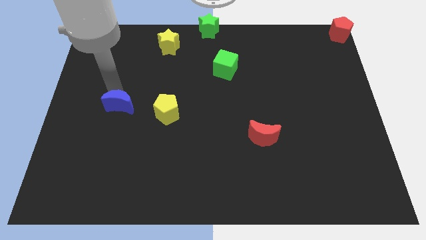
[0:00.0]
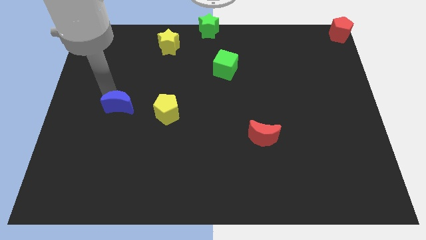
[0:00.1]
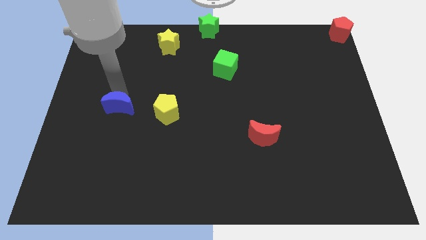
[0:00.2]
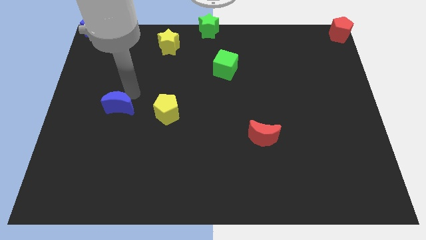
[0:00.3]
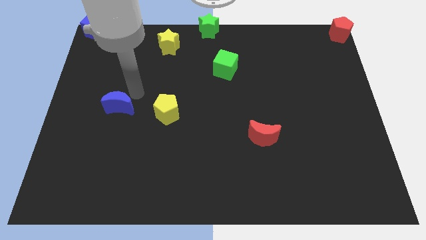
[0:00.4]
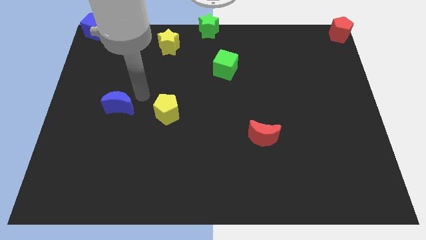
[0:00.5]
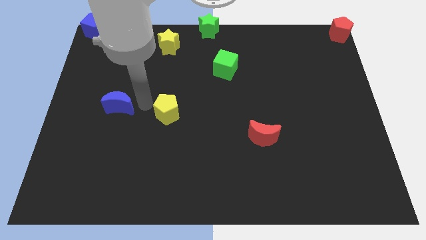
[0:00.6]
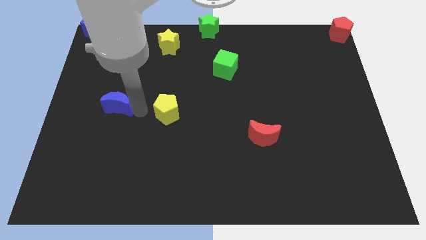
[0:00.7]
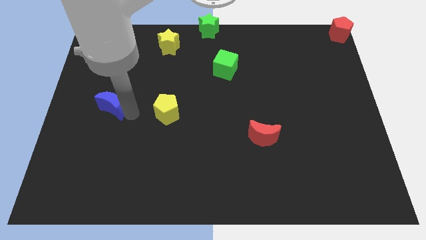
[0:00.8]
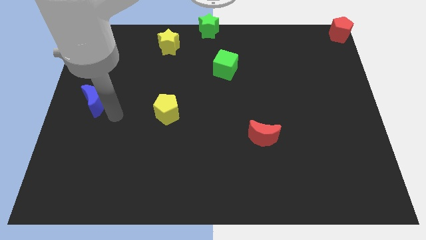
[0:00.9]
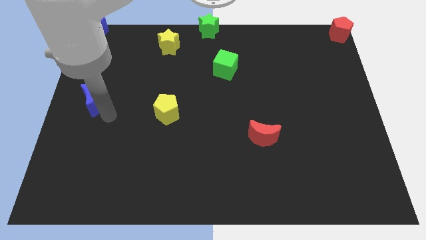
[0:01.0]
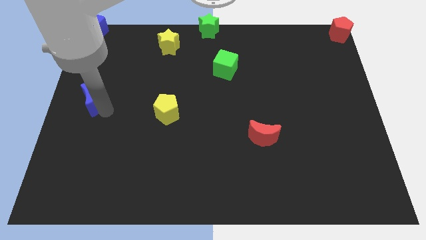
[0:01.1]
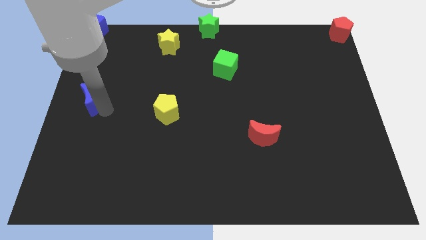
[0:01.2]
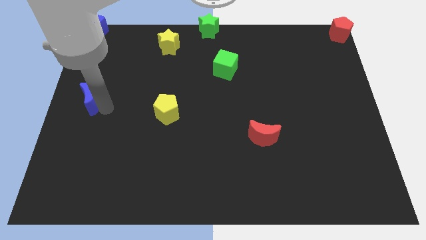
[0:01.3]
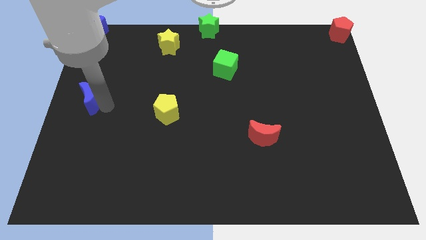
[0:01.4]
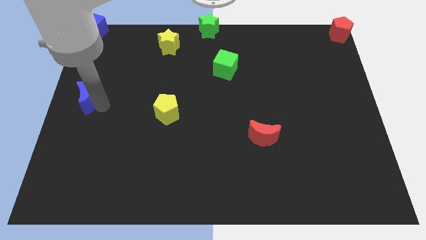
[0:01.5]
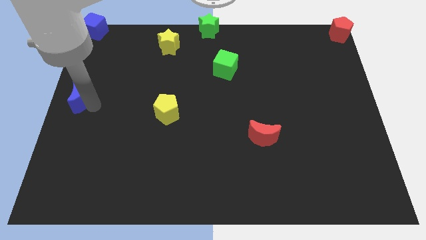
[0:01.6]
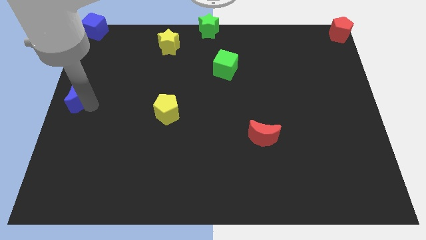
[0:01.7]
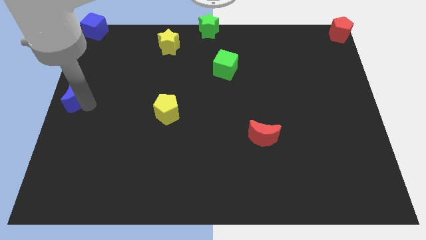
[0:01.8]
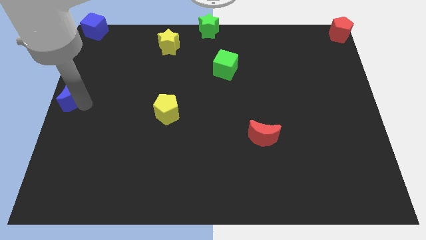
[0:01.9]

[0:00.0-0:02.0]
push the blue crescent to the left center of the board

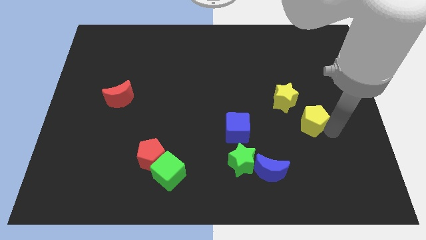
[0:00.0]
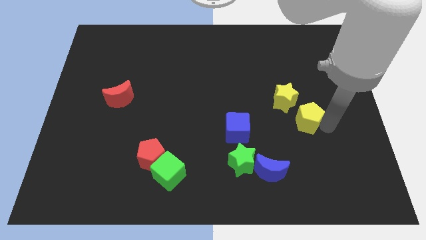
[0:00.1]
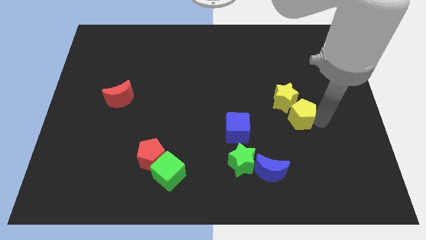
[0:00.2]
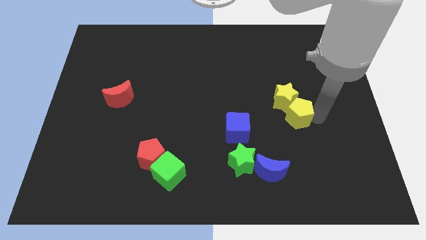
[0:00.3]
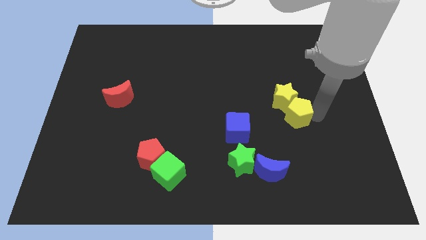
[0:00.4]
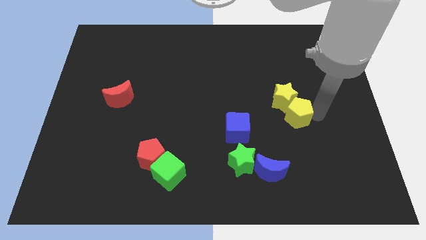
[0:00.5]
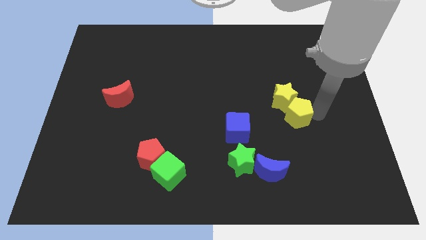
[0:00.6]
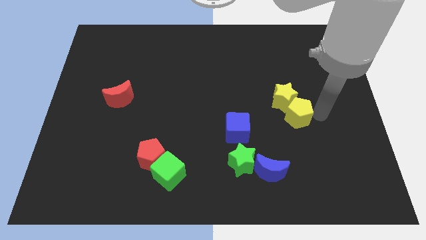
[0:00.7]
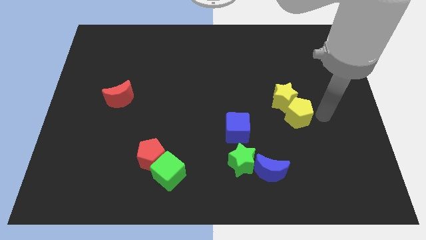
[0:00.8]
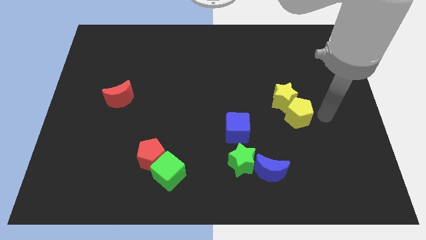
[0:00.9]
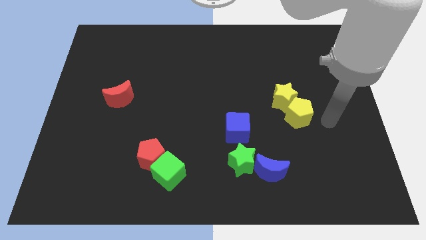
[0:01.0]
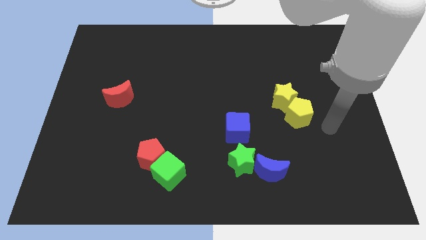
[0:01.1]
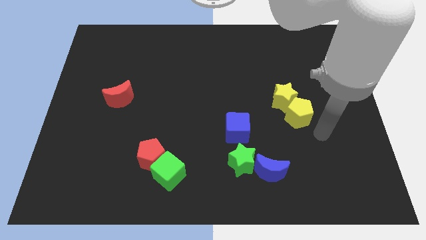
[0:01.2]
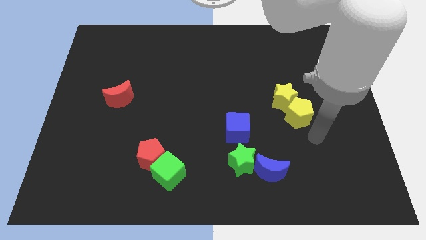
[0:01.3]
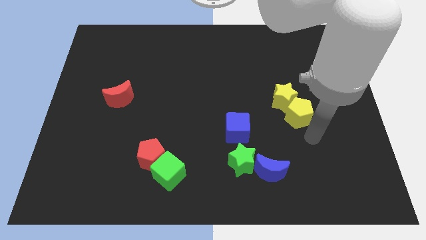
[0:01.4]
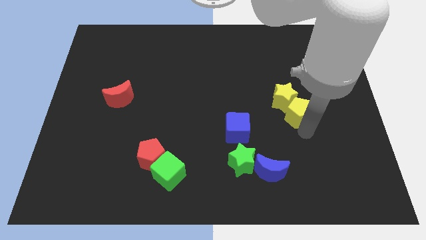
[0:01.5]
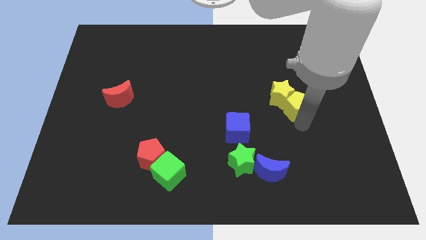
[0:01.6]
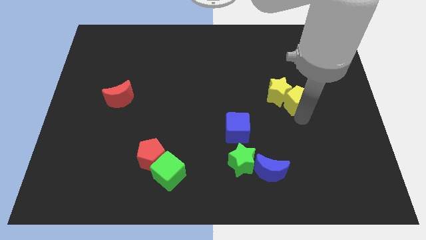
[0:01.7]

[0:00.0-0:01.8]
push yellow pentagon into yellow star

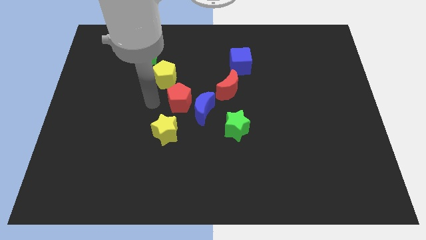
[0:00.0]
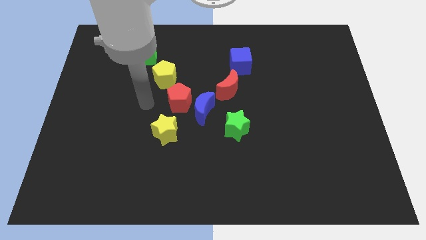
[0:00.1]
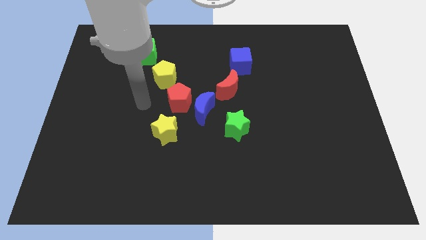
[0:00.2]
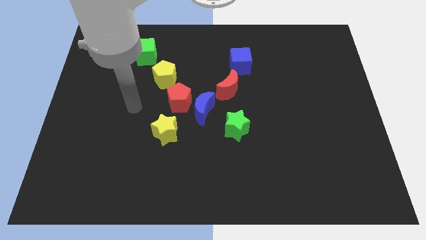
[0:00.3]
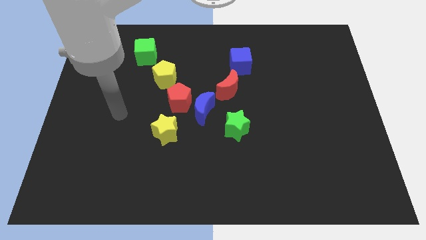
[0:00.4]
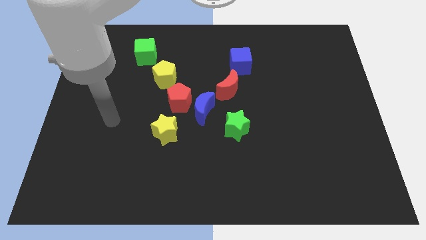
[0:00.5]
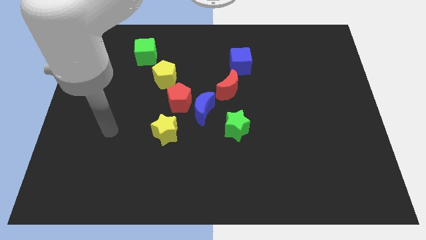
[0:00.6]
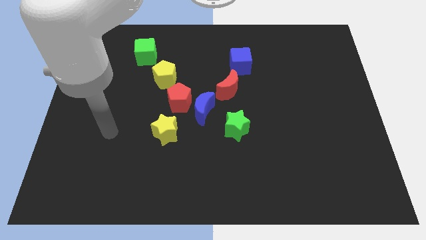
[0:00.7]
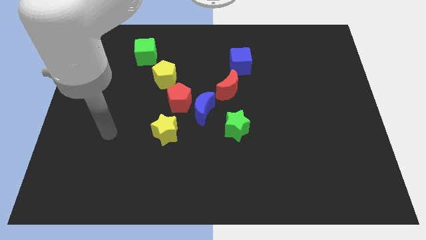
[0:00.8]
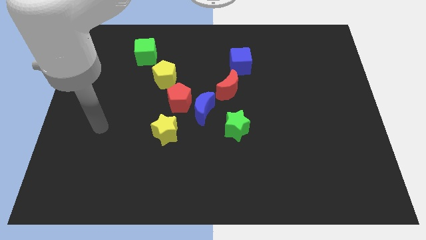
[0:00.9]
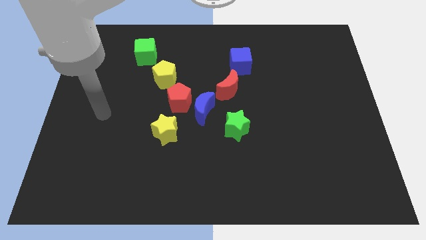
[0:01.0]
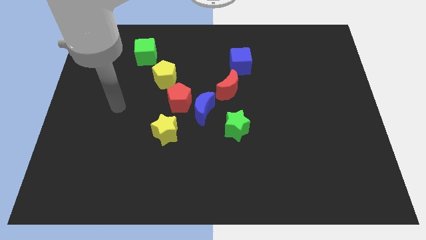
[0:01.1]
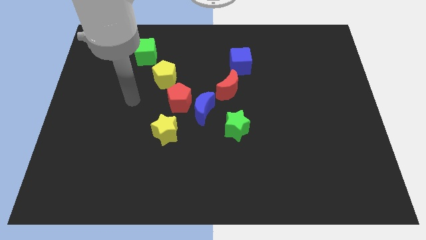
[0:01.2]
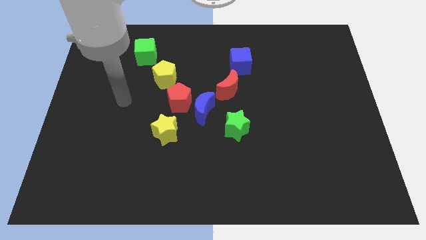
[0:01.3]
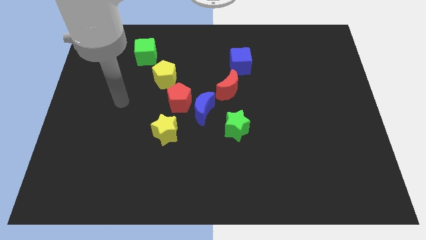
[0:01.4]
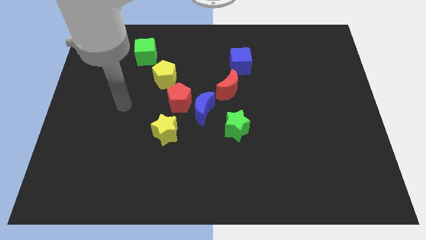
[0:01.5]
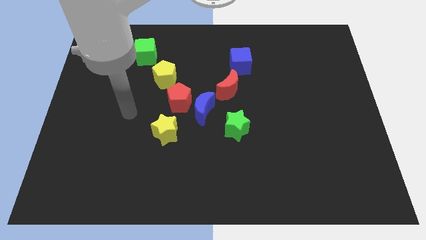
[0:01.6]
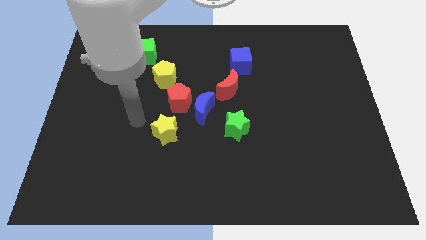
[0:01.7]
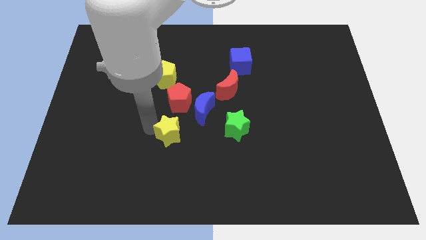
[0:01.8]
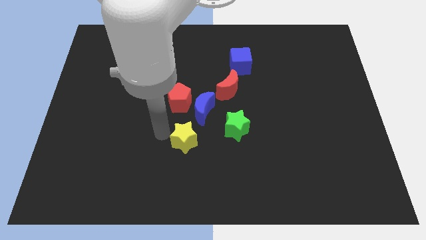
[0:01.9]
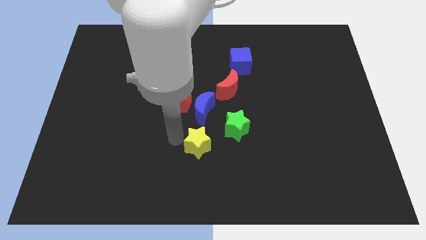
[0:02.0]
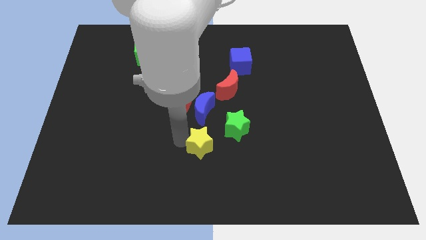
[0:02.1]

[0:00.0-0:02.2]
place the yellow star below the blue moon

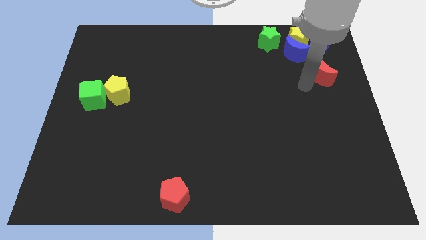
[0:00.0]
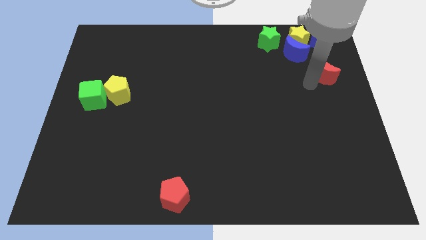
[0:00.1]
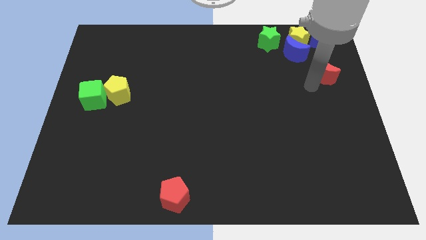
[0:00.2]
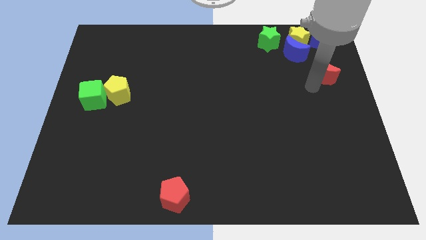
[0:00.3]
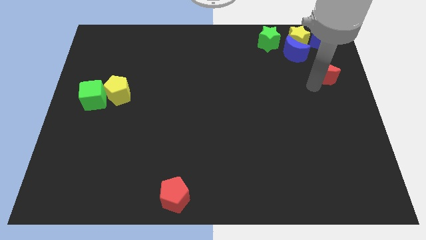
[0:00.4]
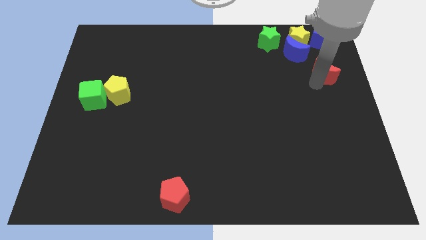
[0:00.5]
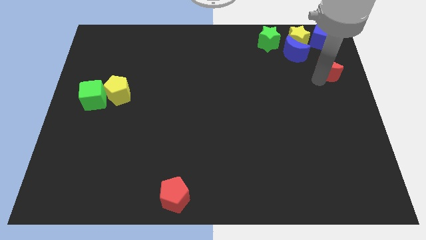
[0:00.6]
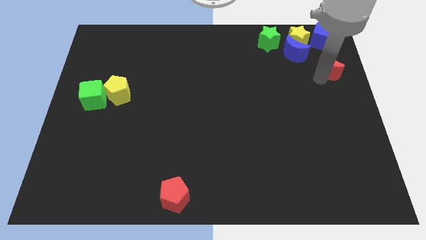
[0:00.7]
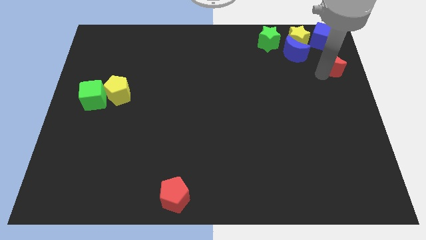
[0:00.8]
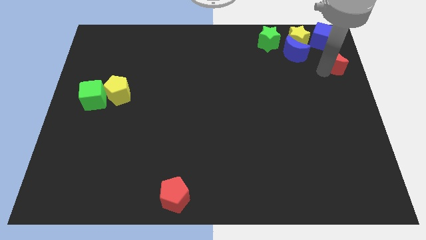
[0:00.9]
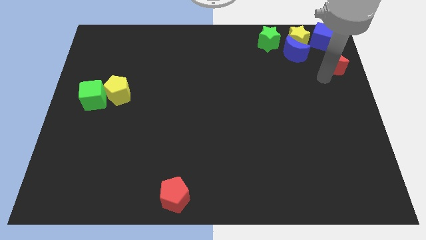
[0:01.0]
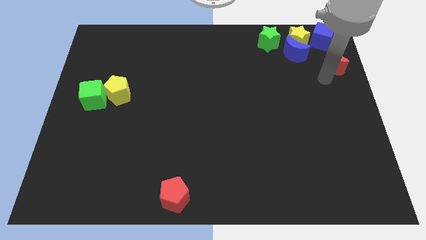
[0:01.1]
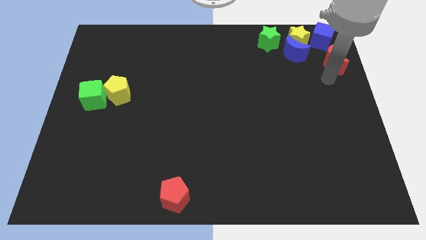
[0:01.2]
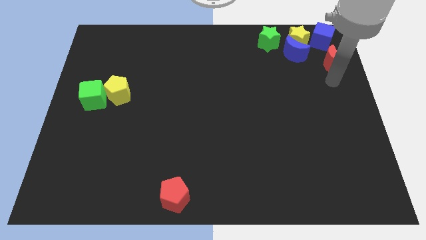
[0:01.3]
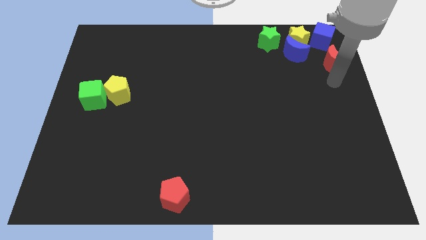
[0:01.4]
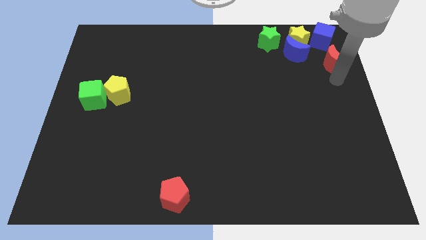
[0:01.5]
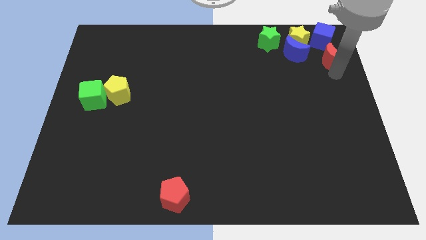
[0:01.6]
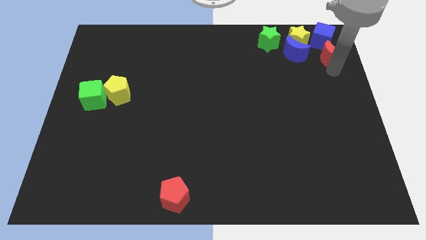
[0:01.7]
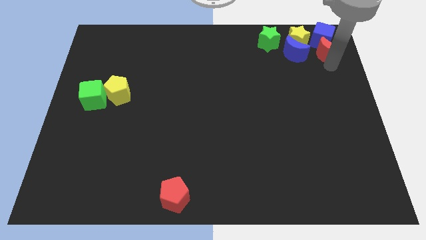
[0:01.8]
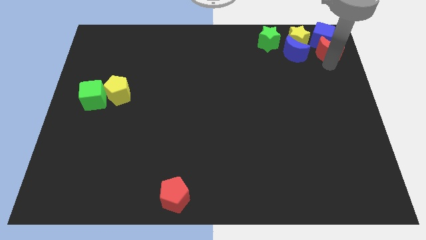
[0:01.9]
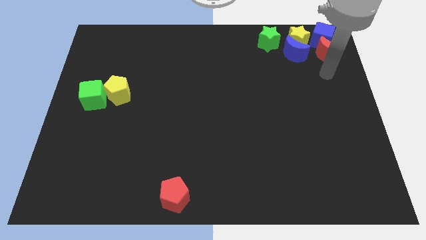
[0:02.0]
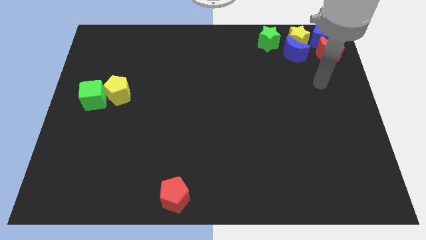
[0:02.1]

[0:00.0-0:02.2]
place red crescent below blue cube

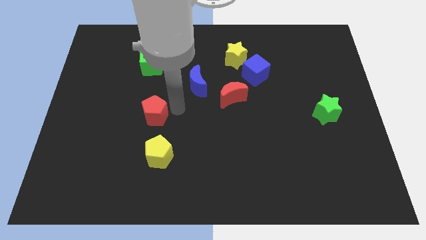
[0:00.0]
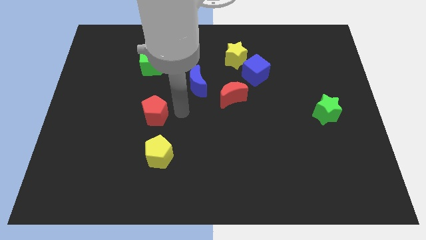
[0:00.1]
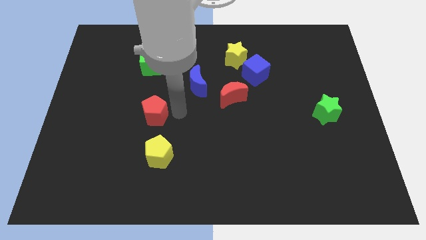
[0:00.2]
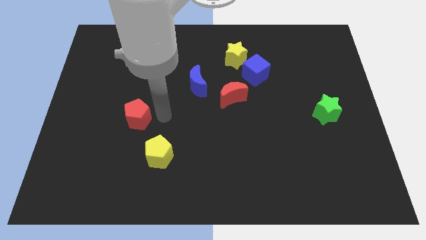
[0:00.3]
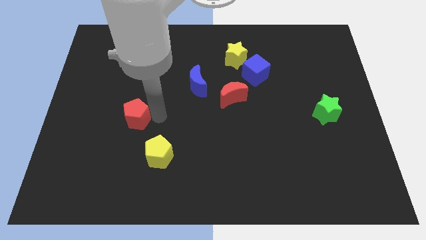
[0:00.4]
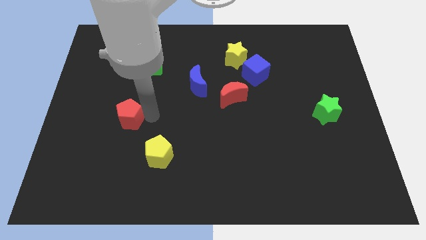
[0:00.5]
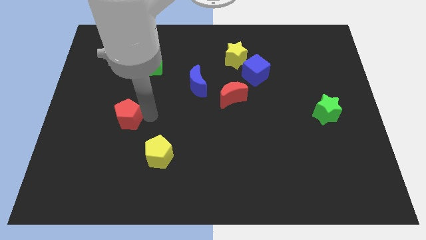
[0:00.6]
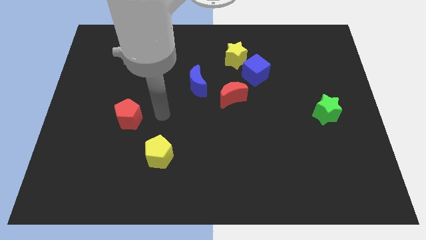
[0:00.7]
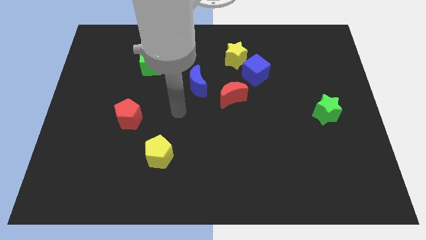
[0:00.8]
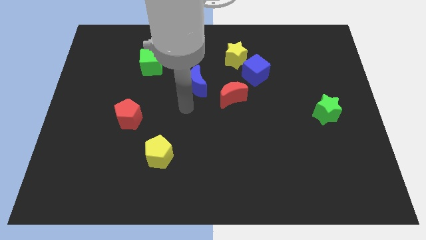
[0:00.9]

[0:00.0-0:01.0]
move red pentagon left above the yellow pentagon
